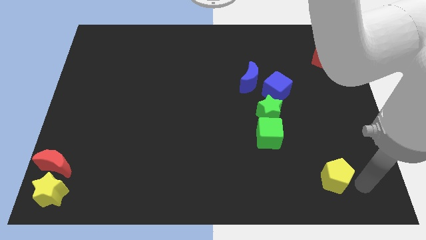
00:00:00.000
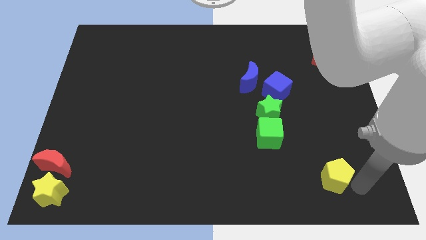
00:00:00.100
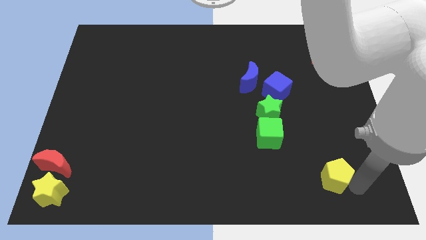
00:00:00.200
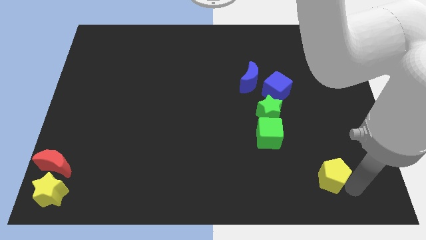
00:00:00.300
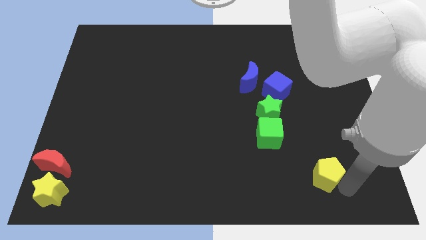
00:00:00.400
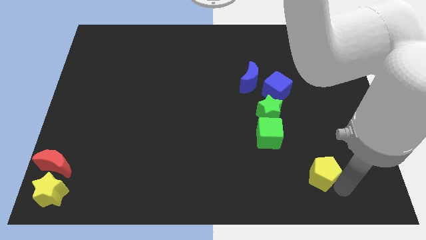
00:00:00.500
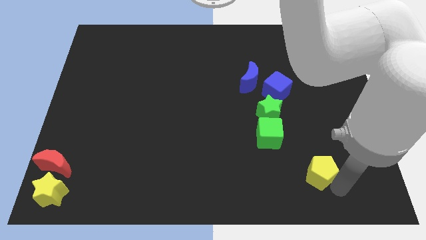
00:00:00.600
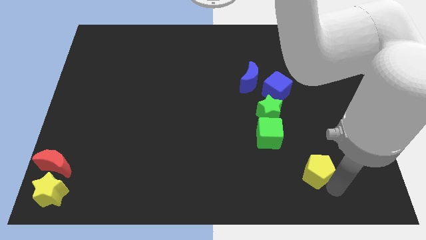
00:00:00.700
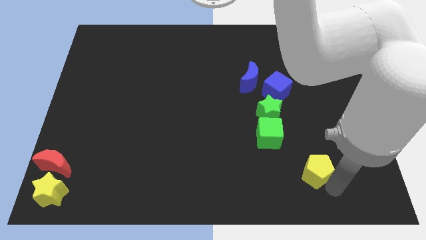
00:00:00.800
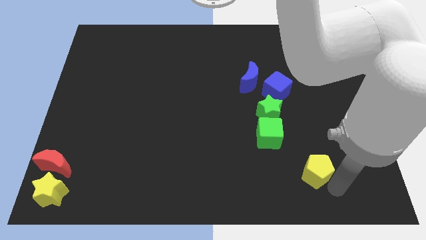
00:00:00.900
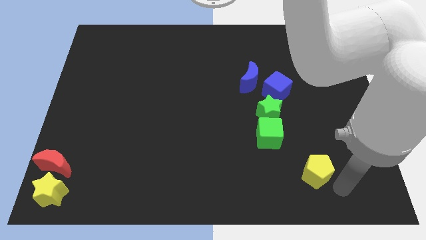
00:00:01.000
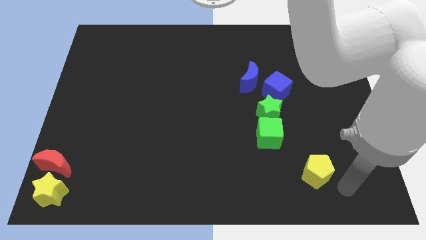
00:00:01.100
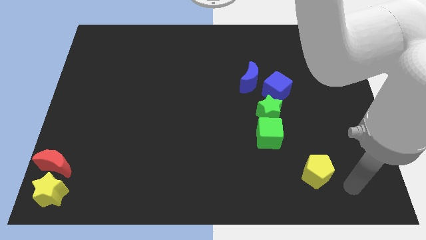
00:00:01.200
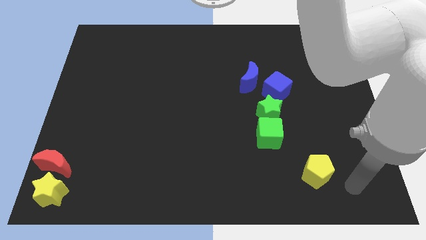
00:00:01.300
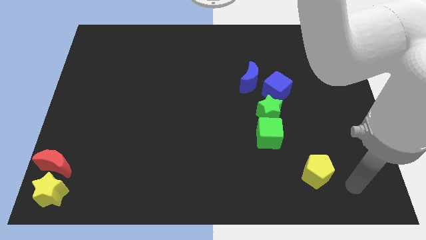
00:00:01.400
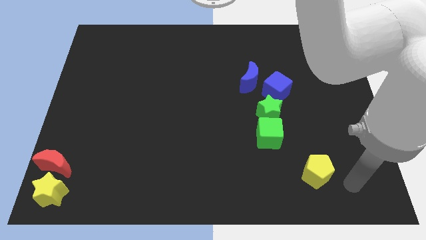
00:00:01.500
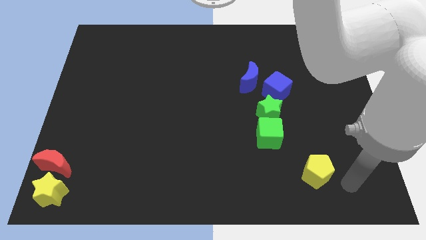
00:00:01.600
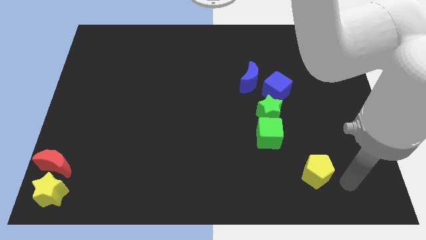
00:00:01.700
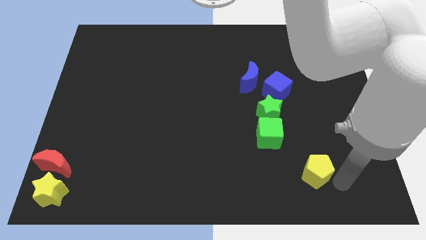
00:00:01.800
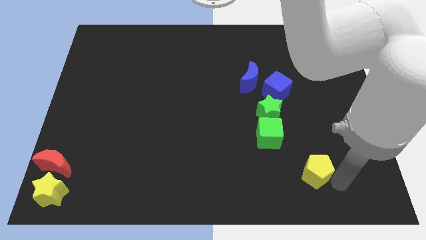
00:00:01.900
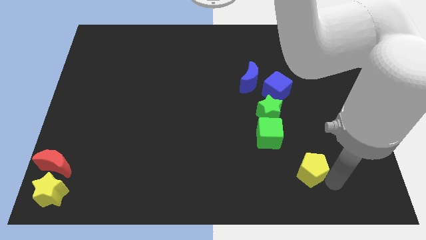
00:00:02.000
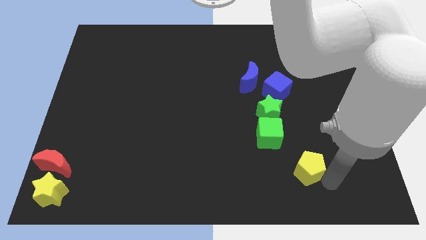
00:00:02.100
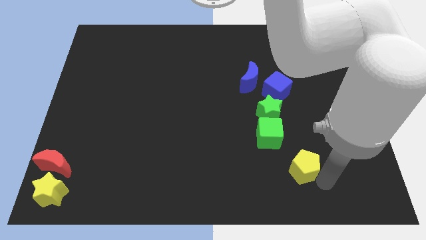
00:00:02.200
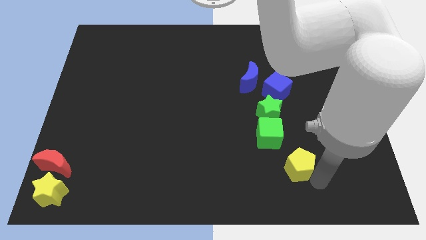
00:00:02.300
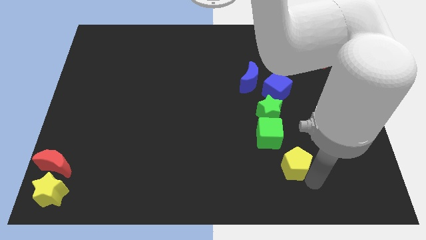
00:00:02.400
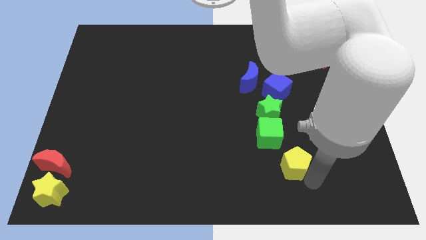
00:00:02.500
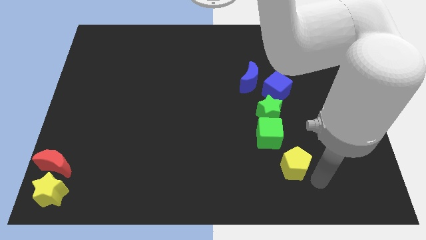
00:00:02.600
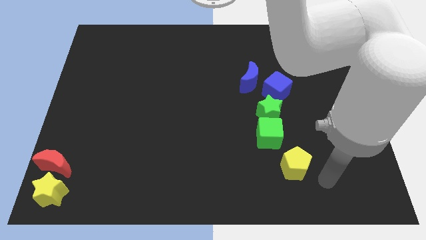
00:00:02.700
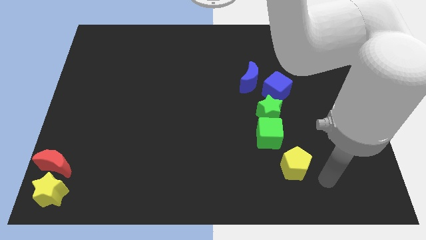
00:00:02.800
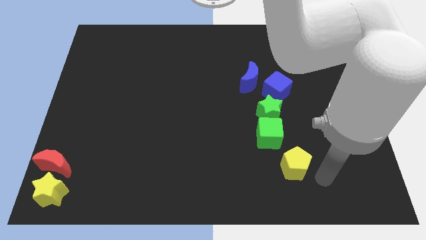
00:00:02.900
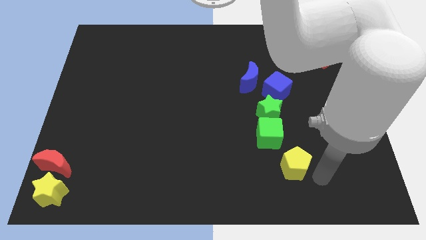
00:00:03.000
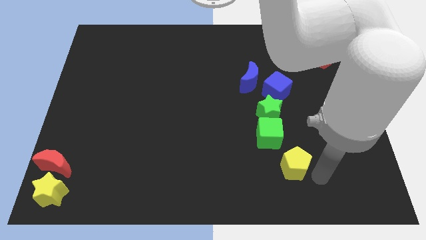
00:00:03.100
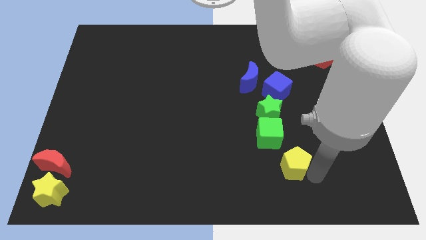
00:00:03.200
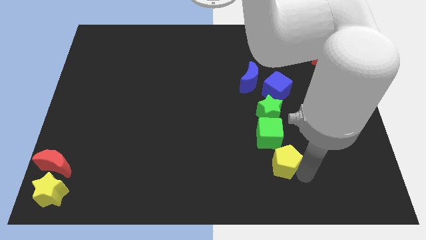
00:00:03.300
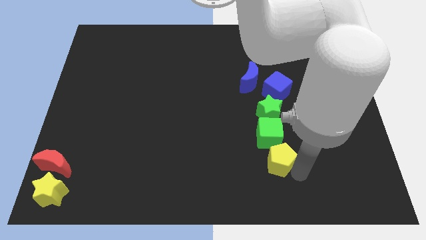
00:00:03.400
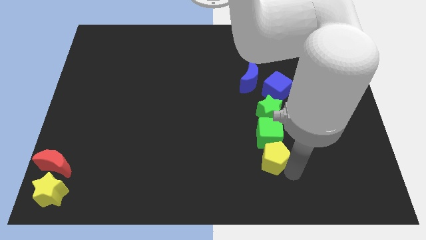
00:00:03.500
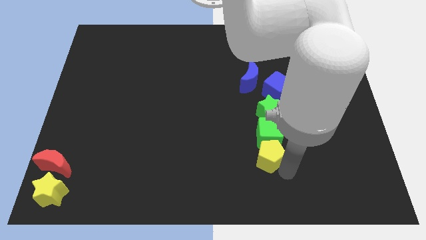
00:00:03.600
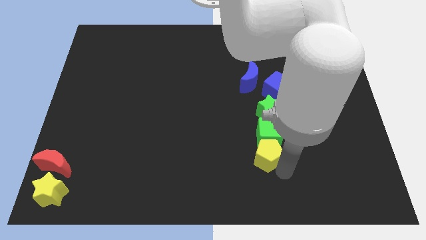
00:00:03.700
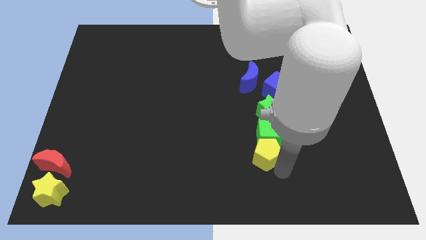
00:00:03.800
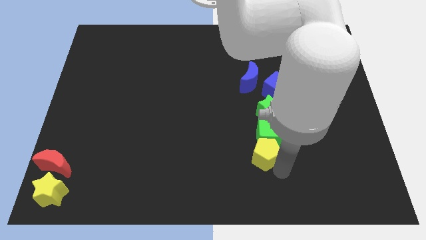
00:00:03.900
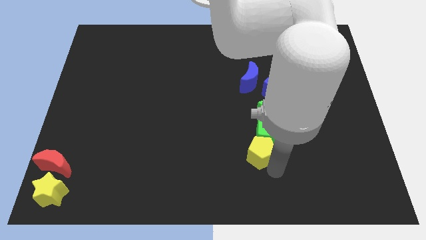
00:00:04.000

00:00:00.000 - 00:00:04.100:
place yellow pentagon to the bottom of green cube

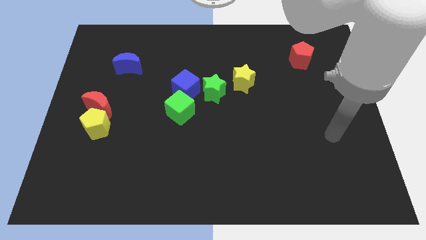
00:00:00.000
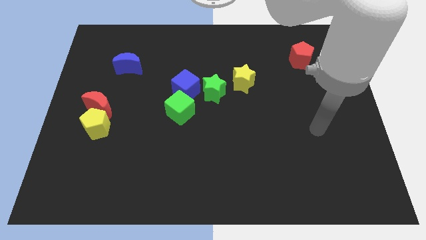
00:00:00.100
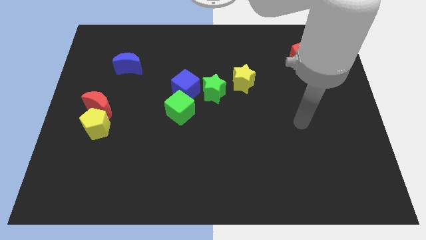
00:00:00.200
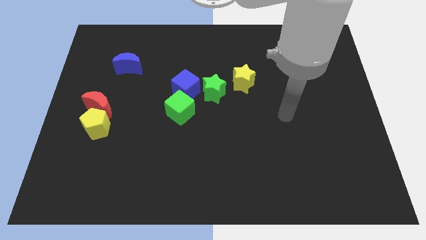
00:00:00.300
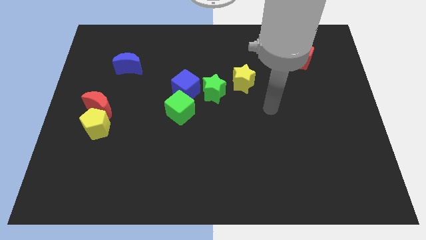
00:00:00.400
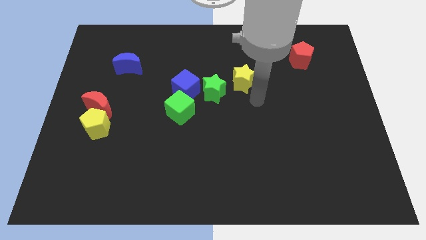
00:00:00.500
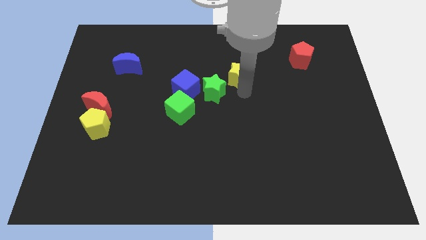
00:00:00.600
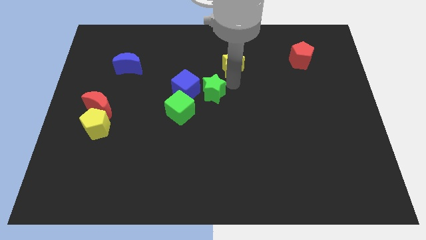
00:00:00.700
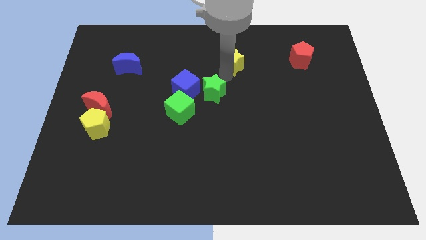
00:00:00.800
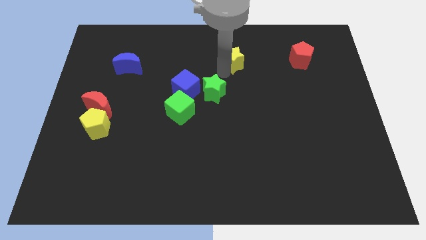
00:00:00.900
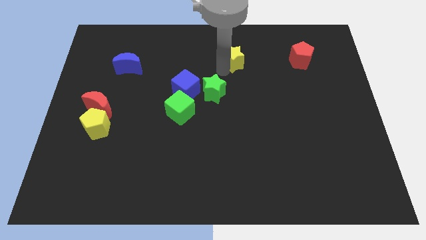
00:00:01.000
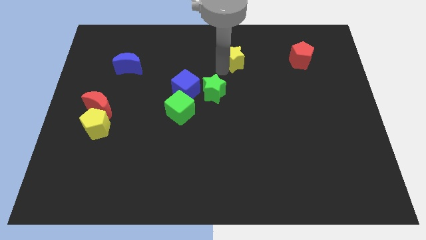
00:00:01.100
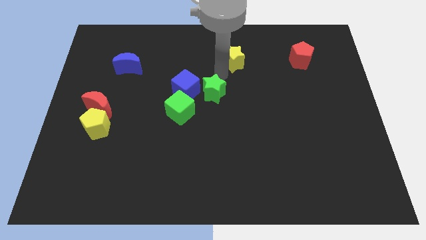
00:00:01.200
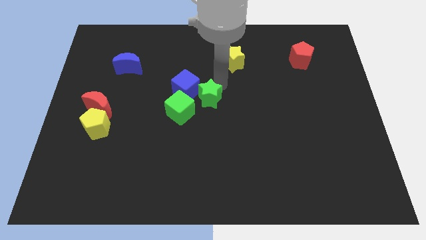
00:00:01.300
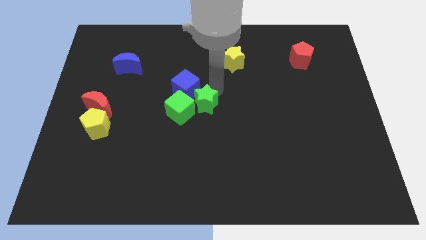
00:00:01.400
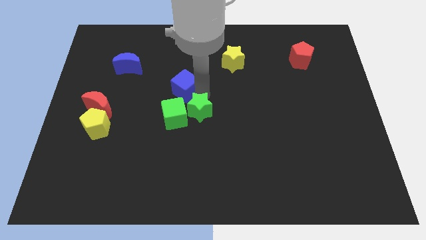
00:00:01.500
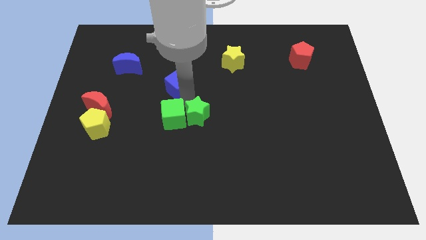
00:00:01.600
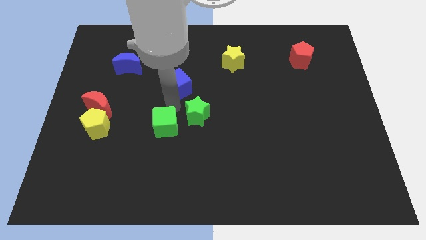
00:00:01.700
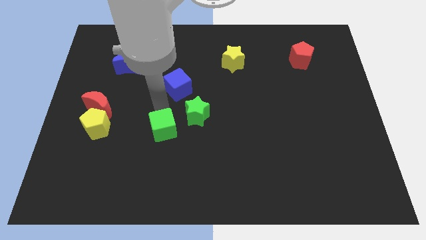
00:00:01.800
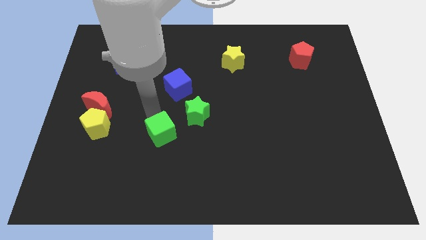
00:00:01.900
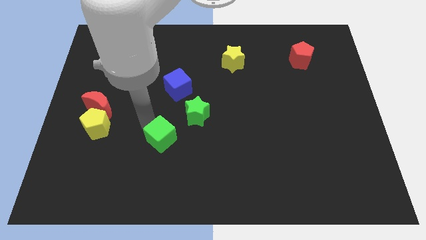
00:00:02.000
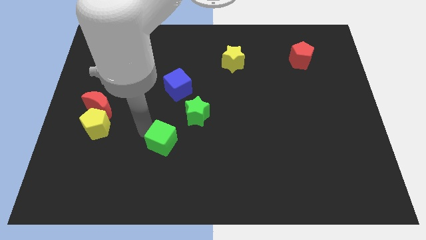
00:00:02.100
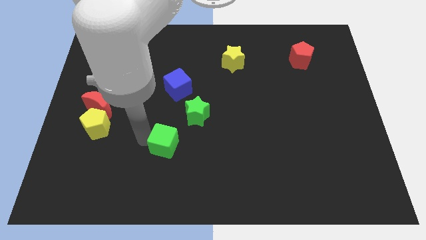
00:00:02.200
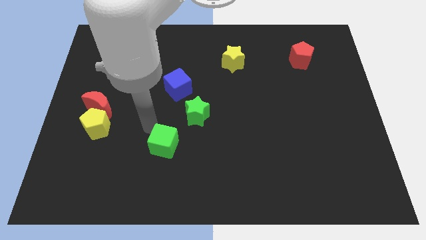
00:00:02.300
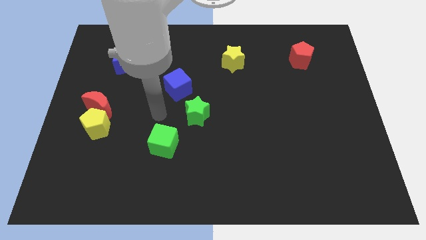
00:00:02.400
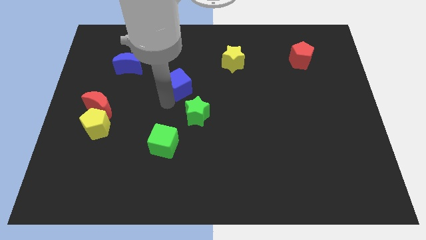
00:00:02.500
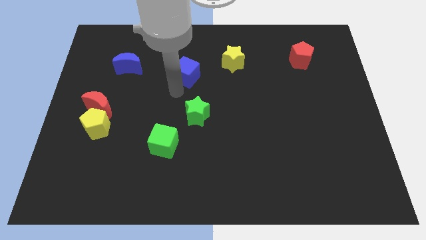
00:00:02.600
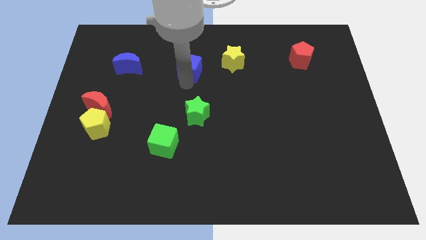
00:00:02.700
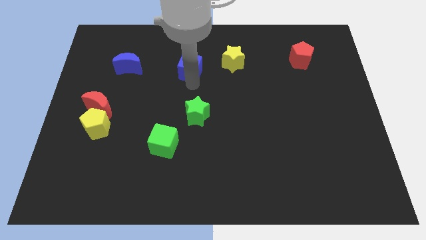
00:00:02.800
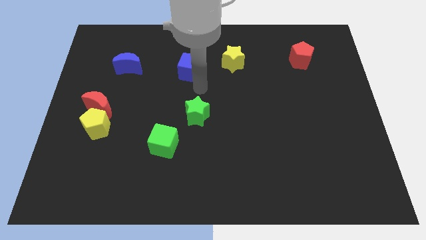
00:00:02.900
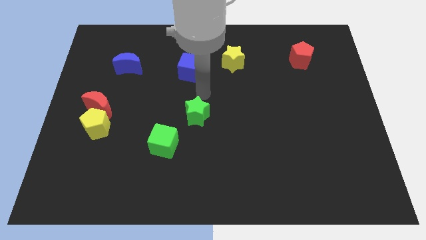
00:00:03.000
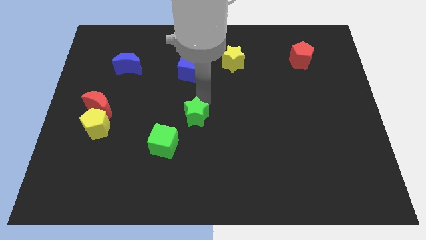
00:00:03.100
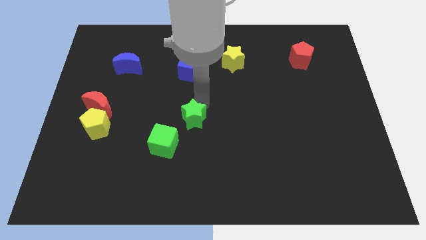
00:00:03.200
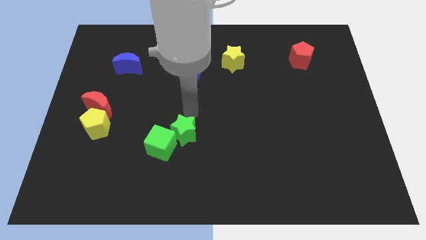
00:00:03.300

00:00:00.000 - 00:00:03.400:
move the green blocks away from the blue cube

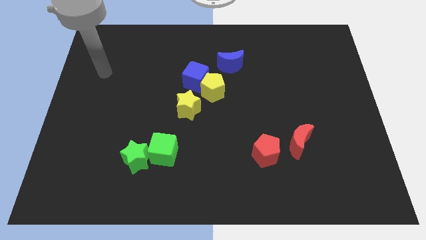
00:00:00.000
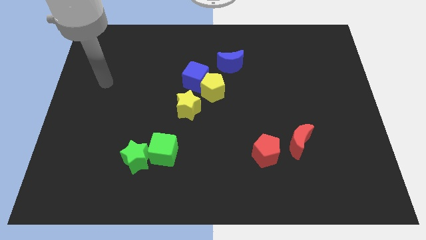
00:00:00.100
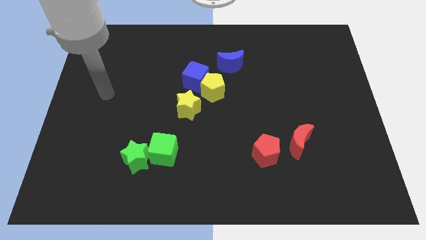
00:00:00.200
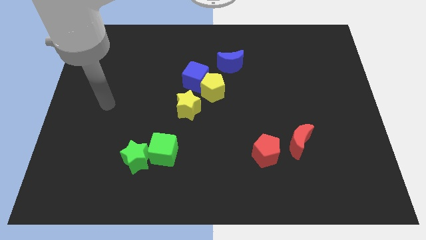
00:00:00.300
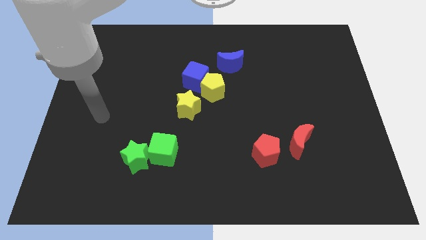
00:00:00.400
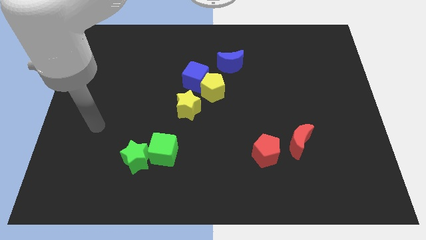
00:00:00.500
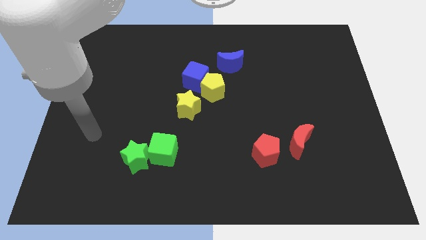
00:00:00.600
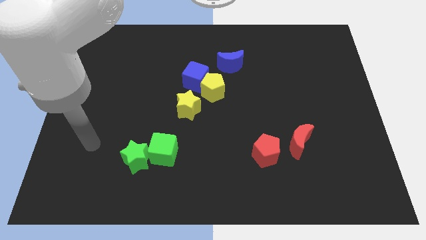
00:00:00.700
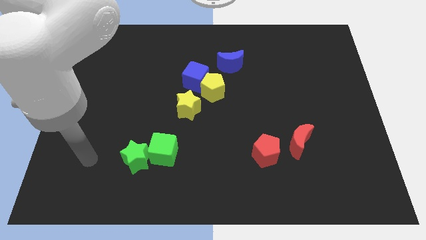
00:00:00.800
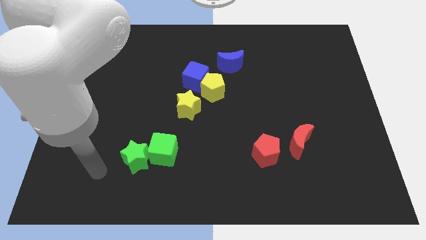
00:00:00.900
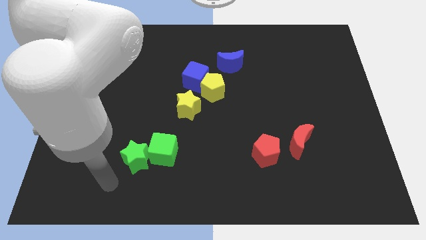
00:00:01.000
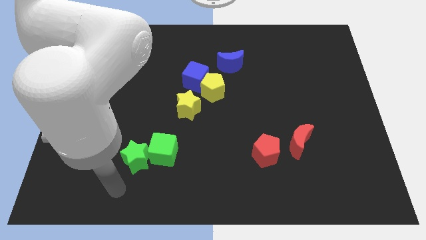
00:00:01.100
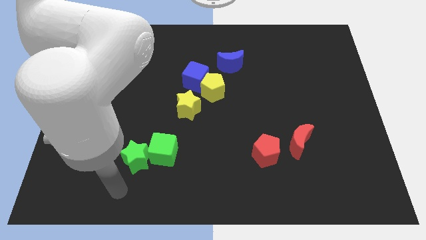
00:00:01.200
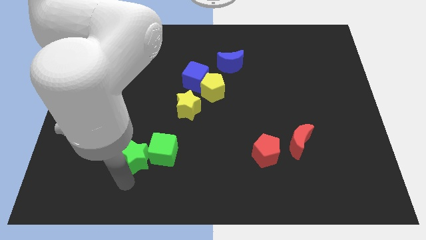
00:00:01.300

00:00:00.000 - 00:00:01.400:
point your arm below green star
